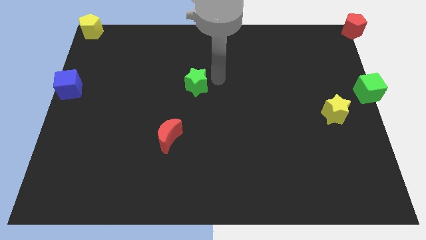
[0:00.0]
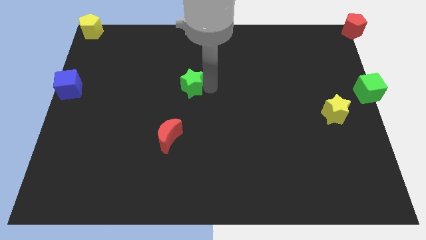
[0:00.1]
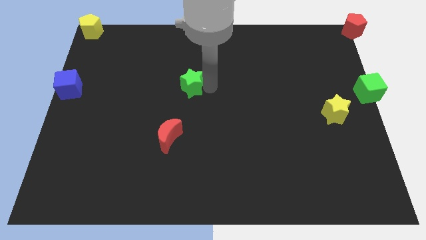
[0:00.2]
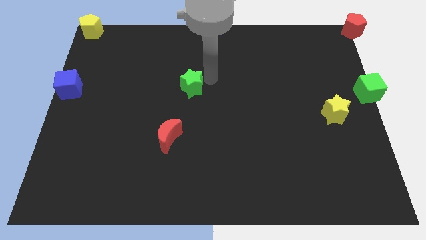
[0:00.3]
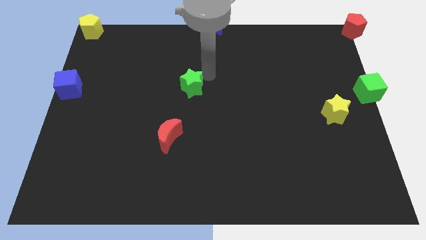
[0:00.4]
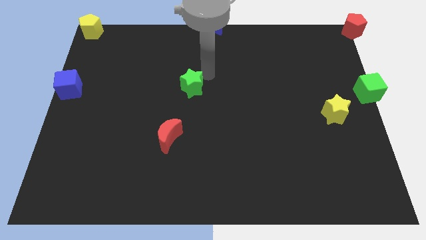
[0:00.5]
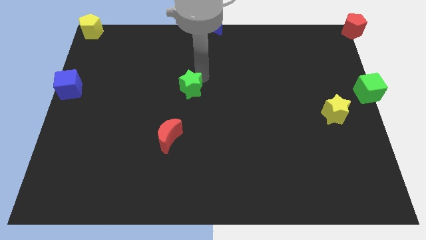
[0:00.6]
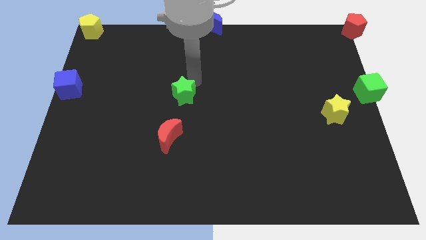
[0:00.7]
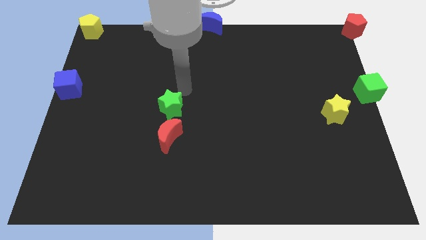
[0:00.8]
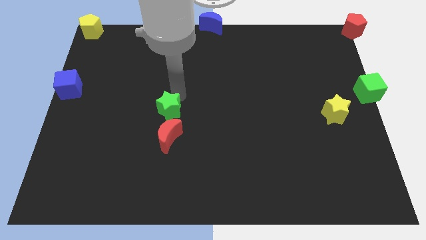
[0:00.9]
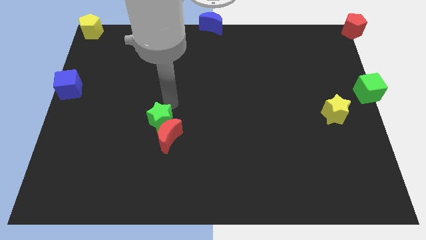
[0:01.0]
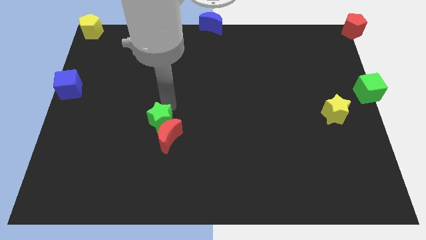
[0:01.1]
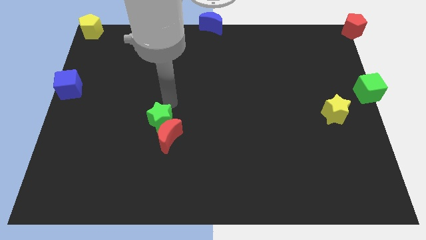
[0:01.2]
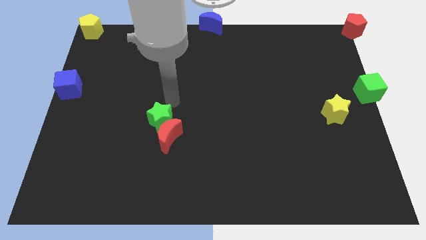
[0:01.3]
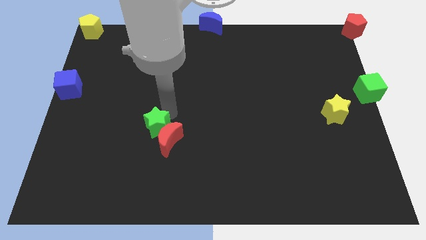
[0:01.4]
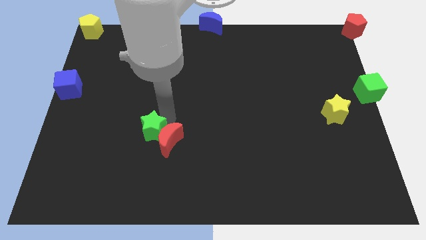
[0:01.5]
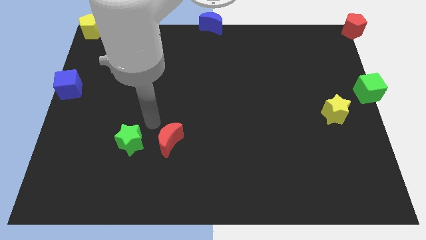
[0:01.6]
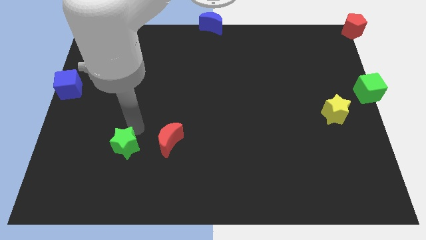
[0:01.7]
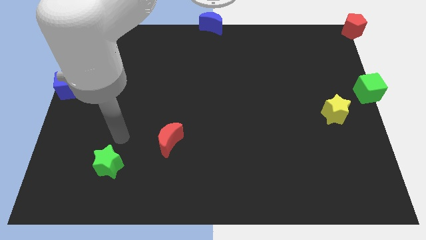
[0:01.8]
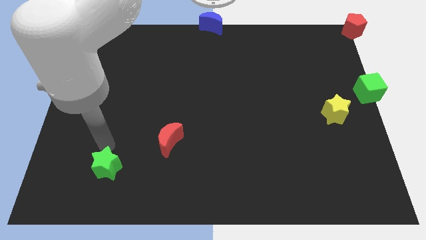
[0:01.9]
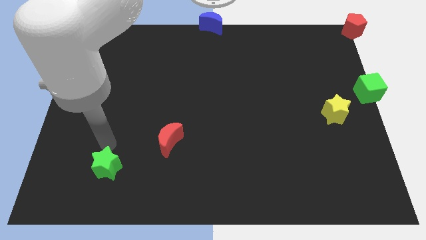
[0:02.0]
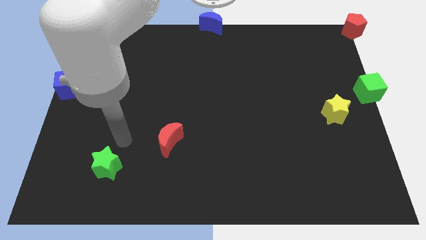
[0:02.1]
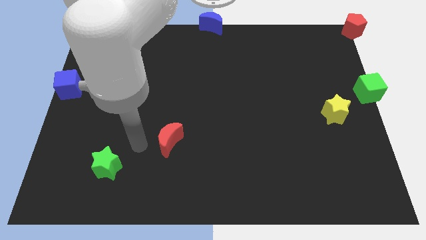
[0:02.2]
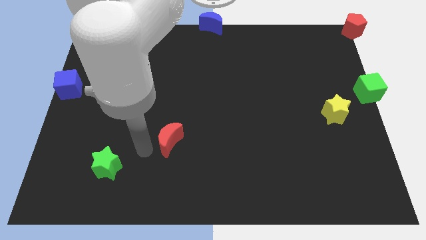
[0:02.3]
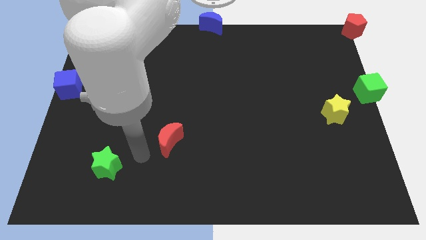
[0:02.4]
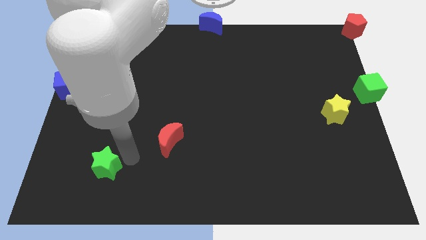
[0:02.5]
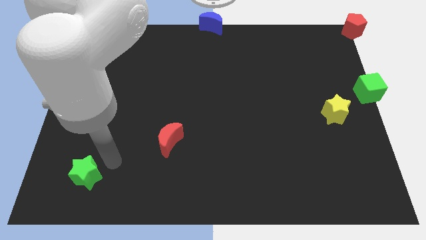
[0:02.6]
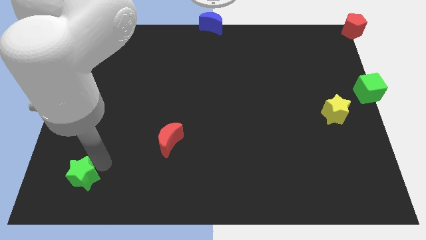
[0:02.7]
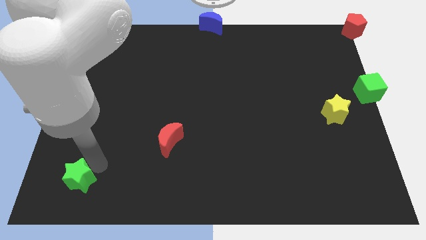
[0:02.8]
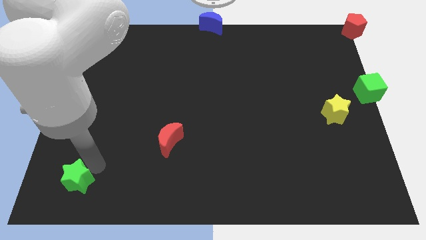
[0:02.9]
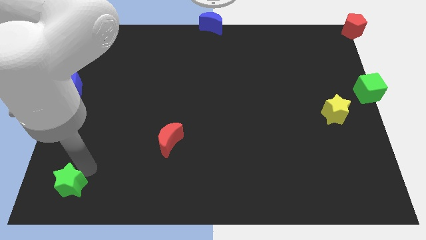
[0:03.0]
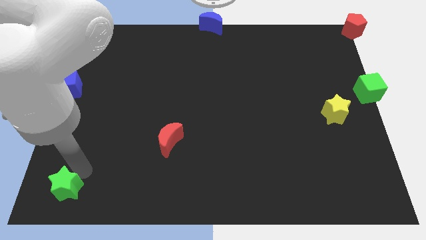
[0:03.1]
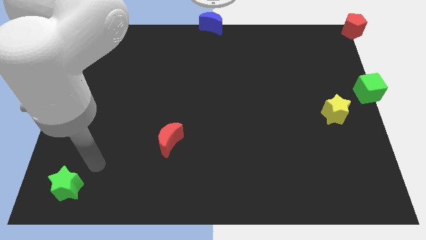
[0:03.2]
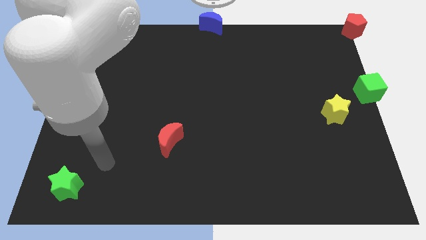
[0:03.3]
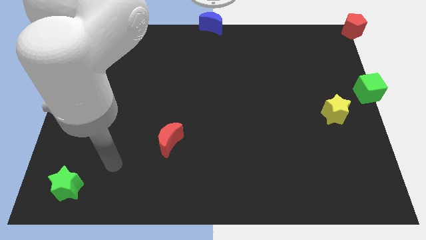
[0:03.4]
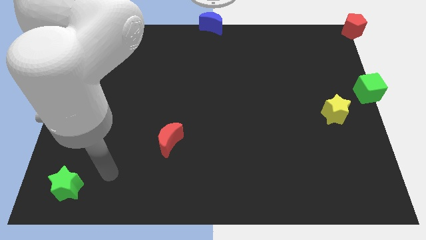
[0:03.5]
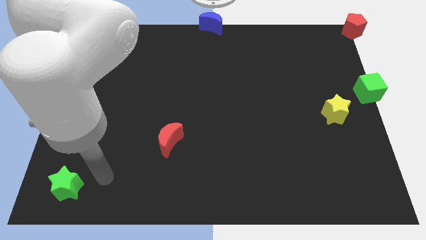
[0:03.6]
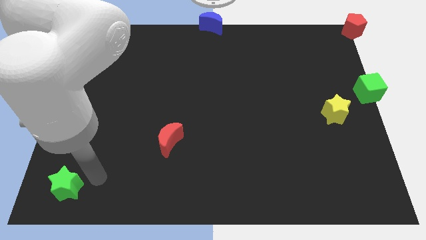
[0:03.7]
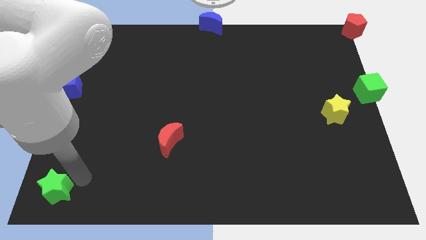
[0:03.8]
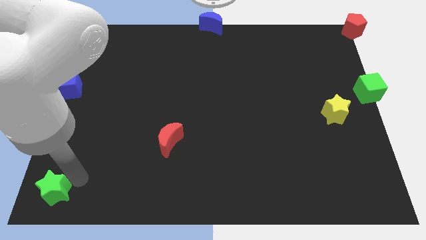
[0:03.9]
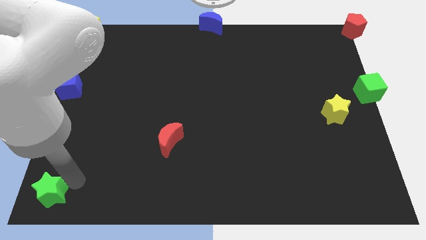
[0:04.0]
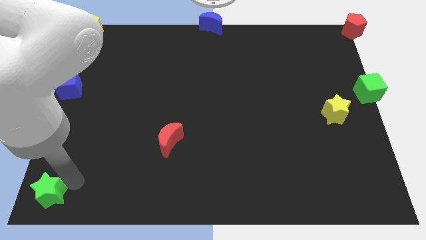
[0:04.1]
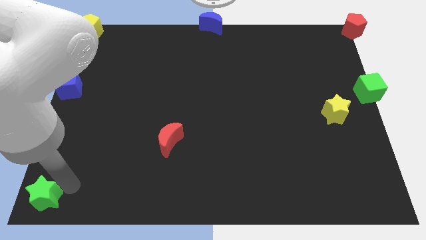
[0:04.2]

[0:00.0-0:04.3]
move the green star to the bottom left corner of the board

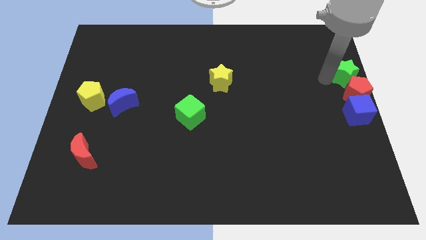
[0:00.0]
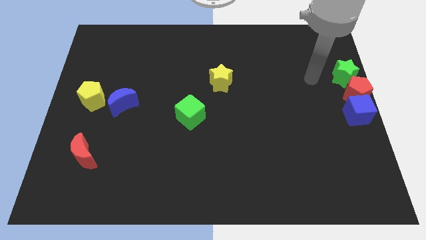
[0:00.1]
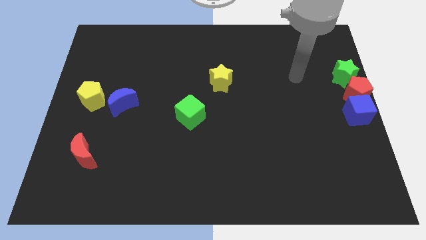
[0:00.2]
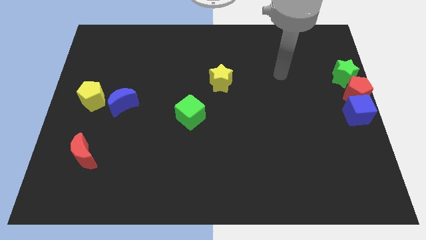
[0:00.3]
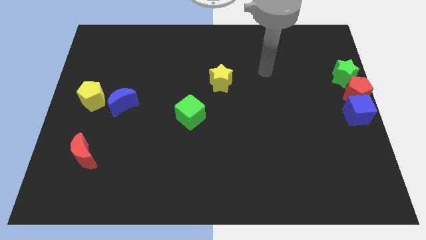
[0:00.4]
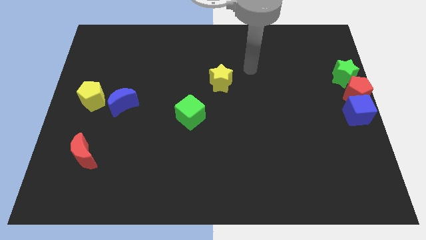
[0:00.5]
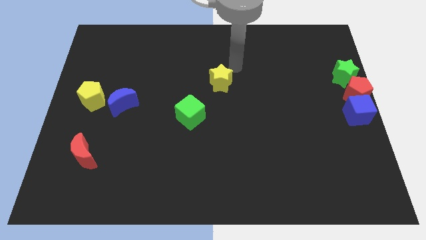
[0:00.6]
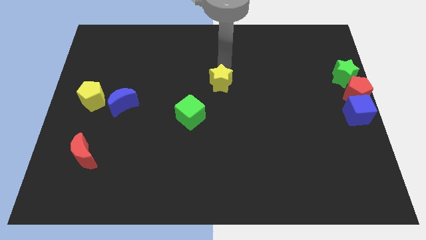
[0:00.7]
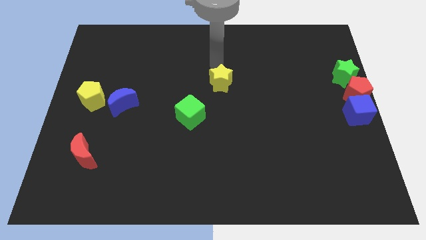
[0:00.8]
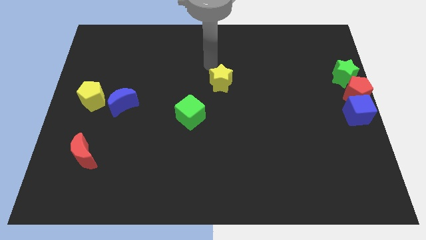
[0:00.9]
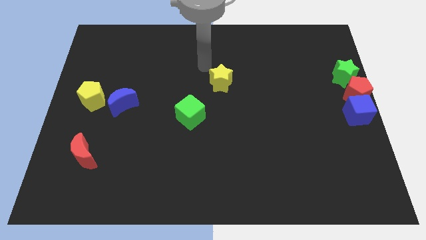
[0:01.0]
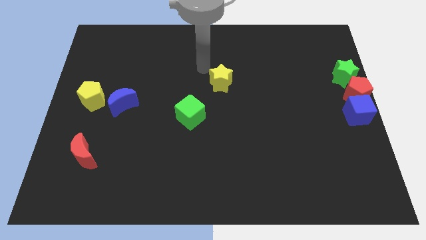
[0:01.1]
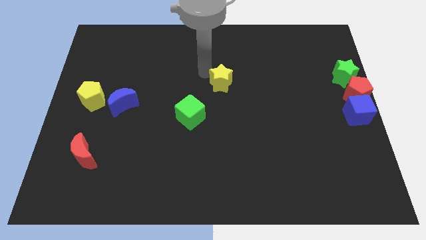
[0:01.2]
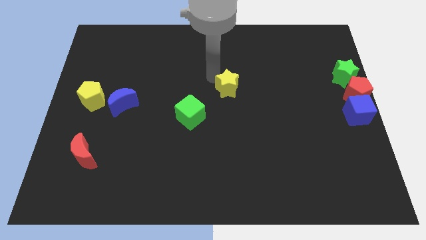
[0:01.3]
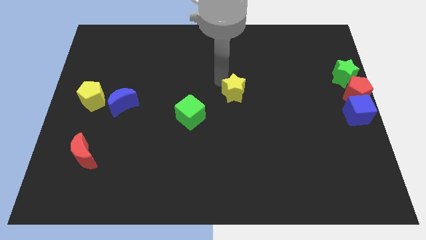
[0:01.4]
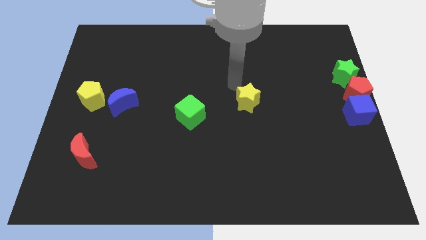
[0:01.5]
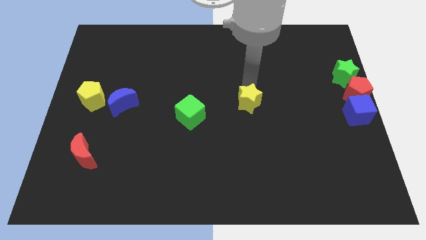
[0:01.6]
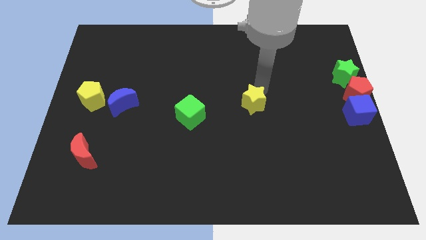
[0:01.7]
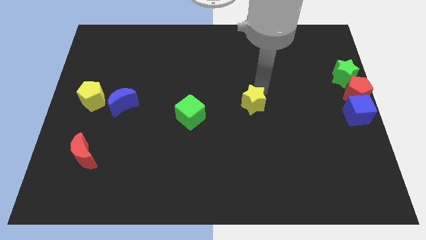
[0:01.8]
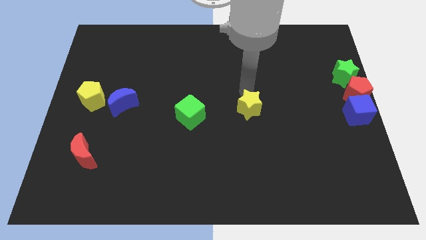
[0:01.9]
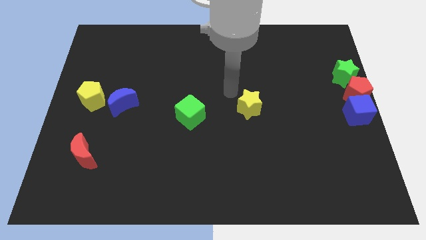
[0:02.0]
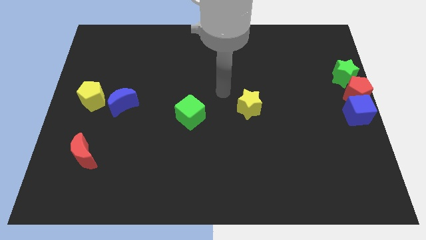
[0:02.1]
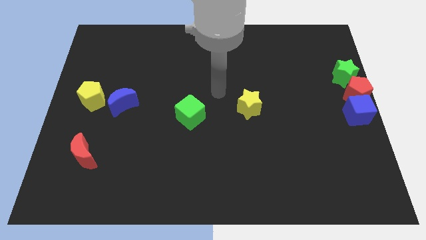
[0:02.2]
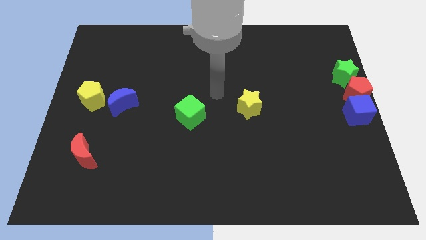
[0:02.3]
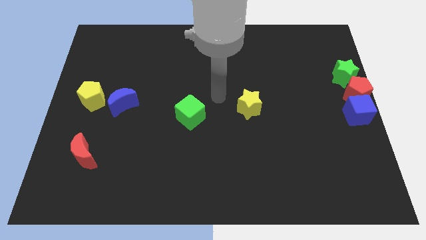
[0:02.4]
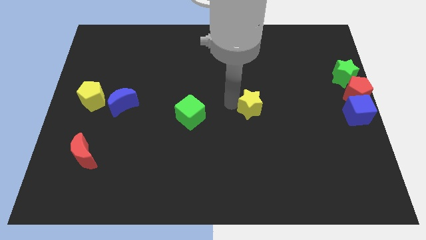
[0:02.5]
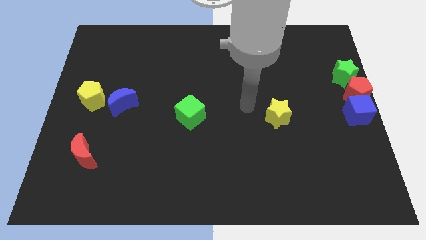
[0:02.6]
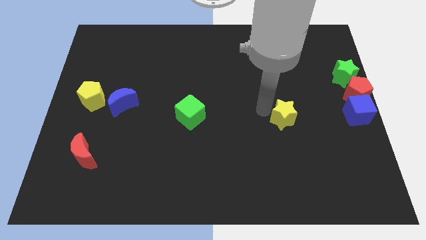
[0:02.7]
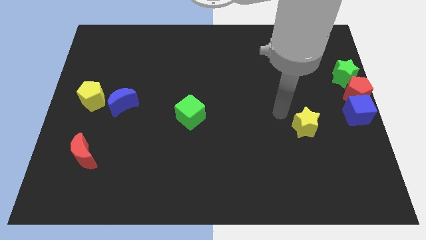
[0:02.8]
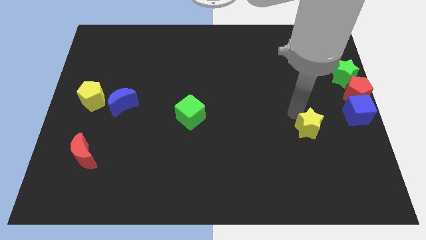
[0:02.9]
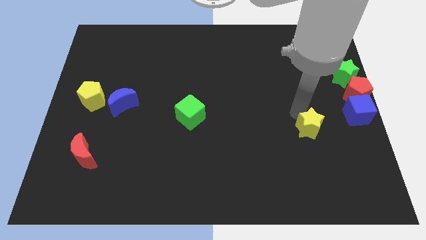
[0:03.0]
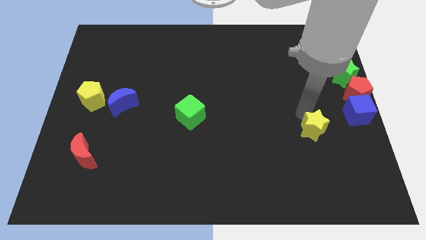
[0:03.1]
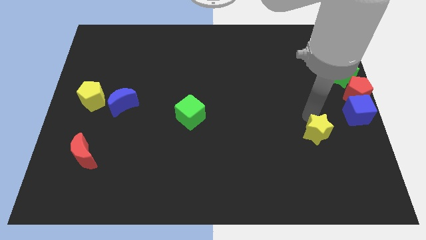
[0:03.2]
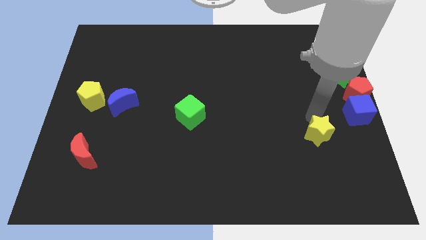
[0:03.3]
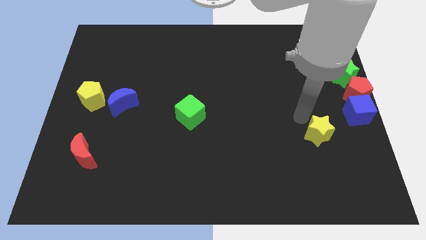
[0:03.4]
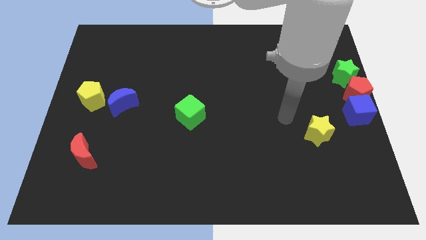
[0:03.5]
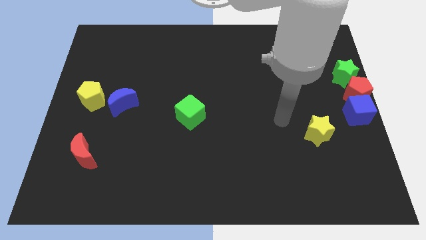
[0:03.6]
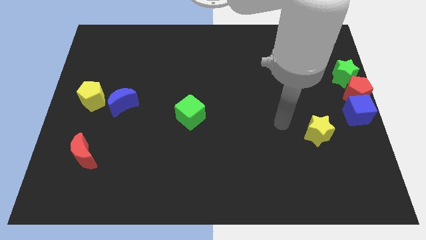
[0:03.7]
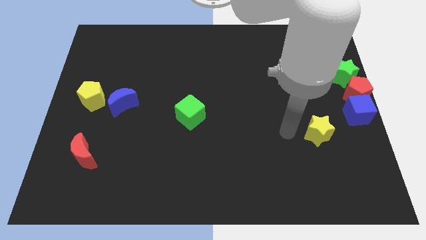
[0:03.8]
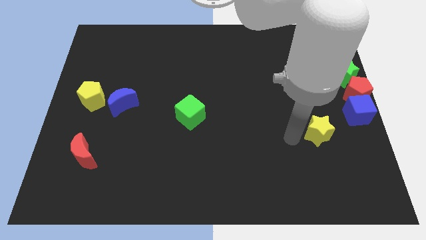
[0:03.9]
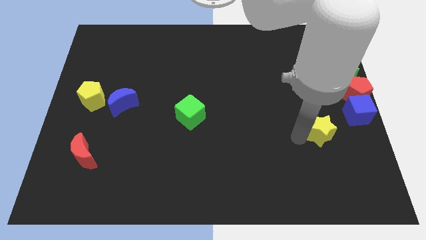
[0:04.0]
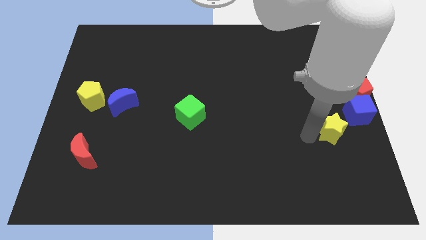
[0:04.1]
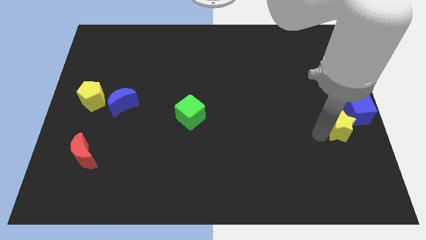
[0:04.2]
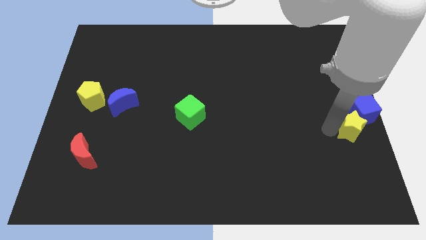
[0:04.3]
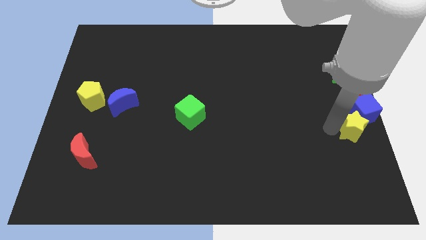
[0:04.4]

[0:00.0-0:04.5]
move the yellow star to the bottom left of the blue cube
